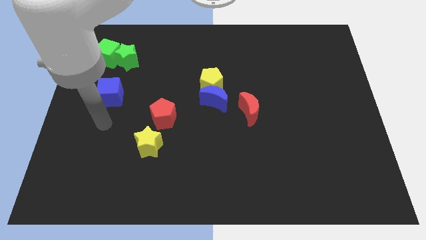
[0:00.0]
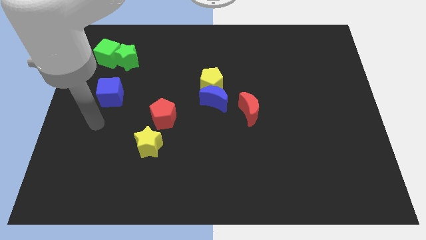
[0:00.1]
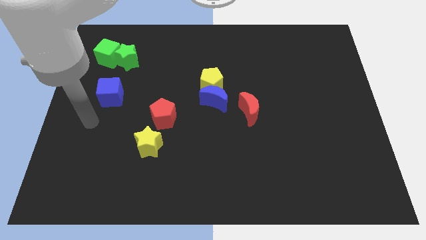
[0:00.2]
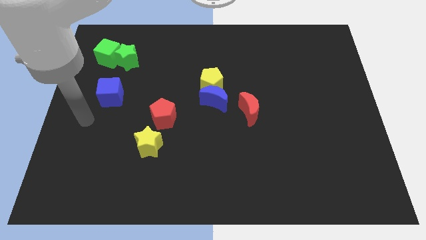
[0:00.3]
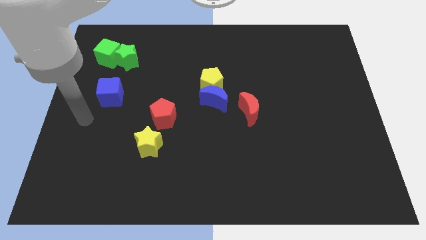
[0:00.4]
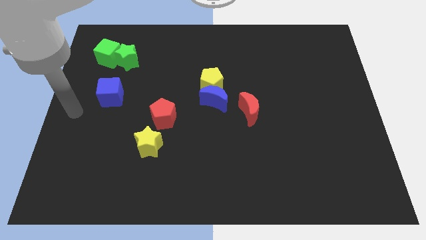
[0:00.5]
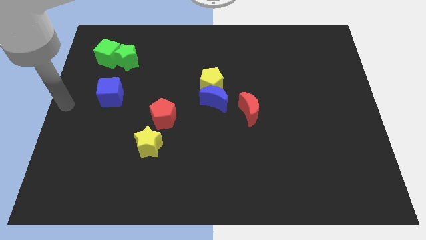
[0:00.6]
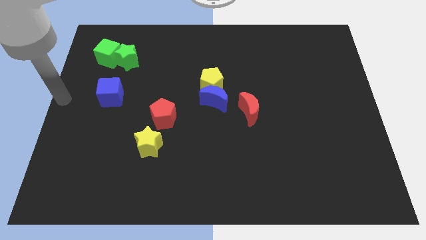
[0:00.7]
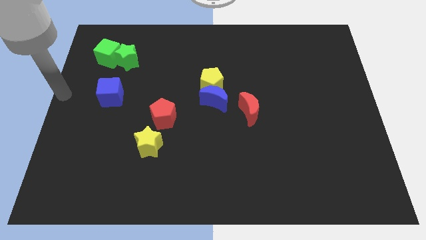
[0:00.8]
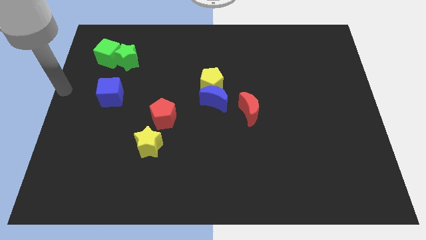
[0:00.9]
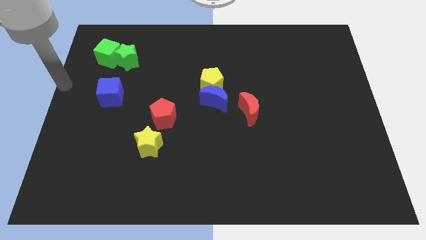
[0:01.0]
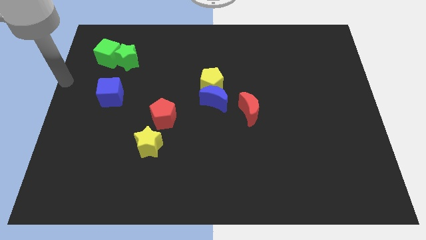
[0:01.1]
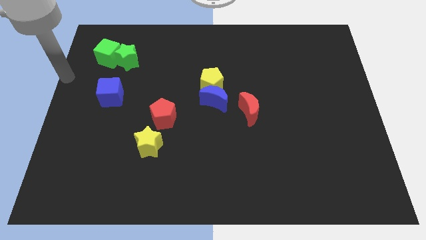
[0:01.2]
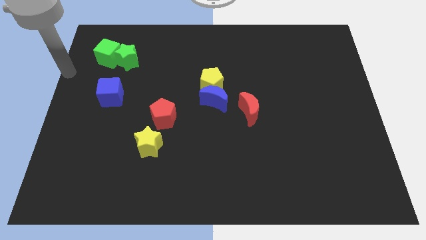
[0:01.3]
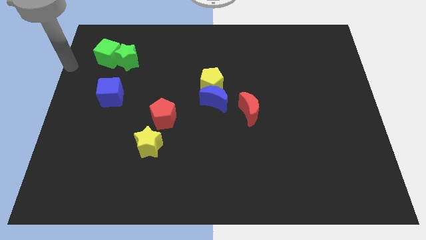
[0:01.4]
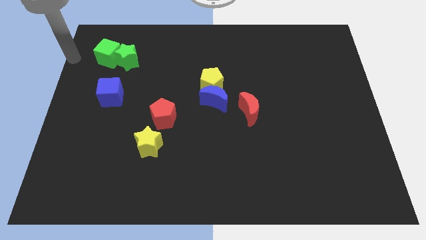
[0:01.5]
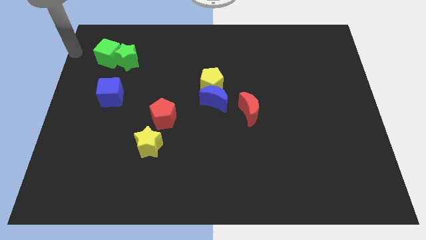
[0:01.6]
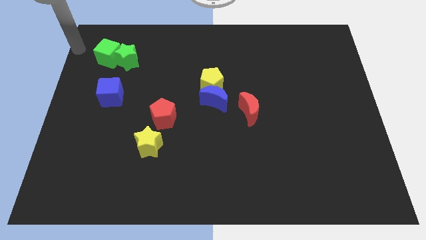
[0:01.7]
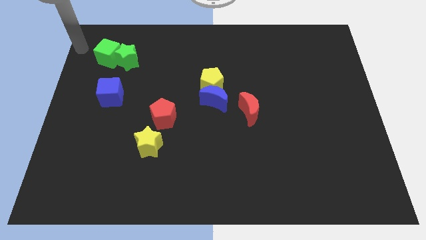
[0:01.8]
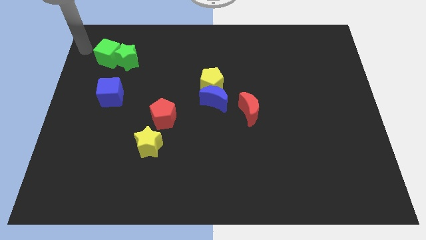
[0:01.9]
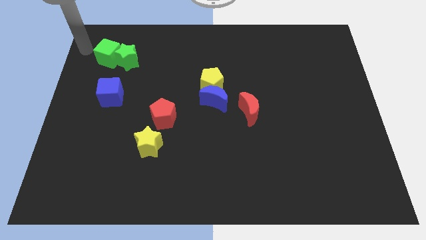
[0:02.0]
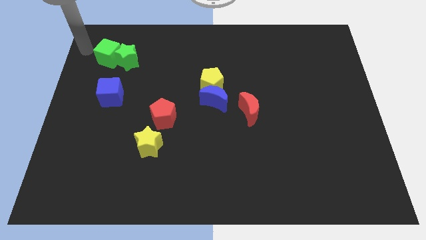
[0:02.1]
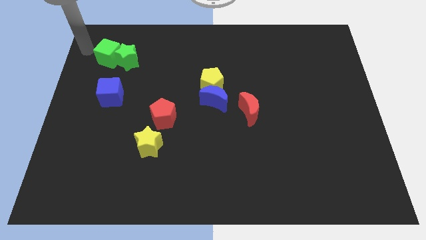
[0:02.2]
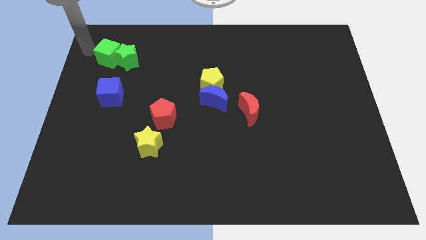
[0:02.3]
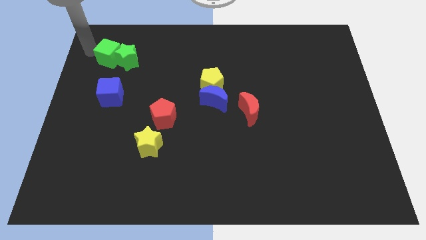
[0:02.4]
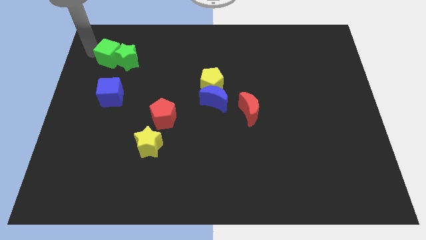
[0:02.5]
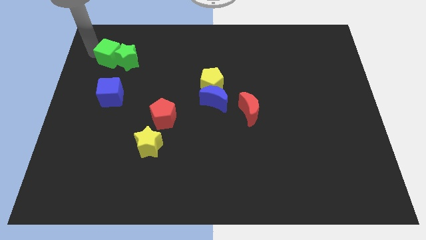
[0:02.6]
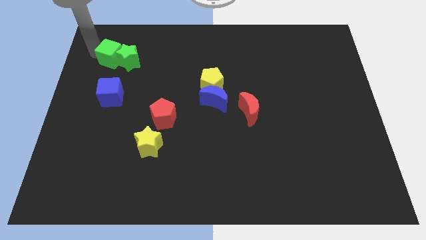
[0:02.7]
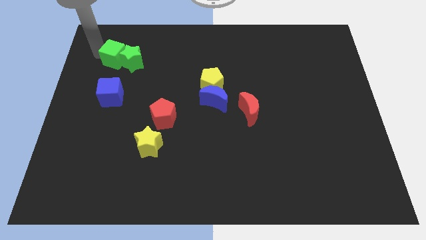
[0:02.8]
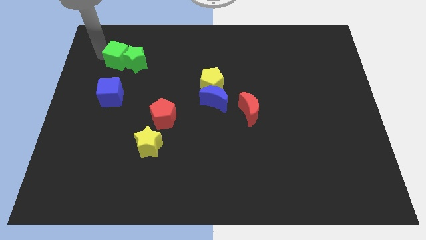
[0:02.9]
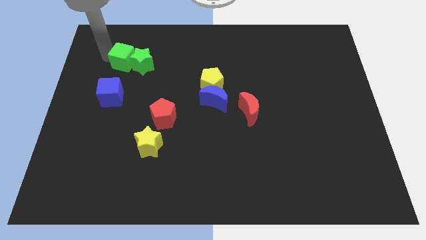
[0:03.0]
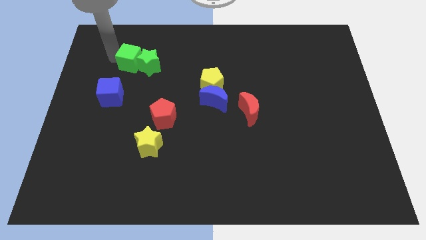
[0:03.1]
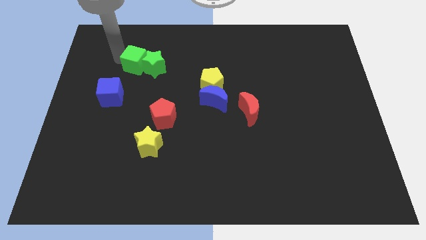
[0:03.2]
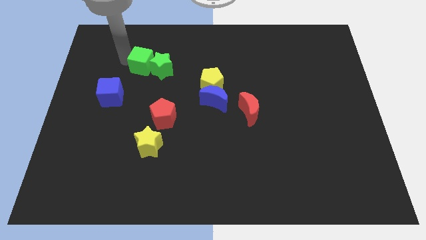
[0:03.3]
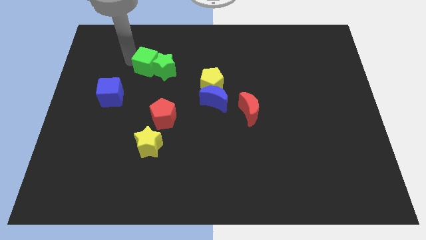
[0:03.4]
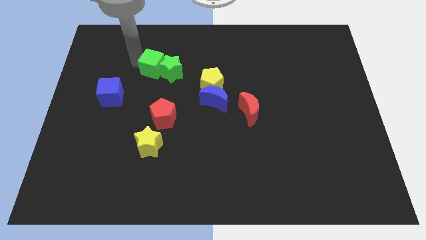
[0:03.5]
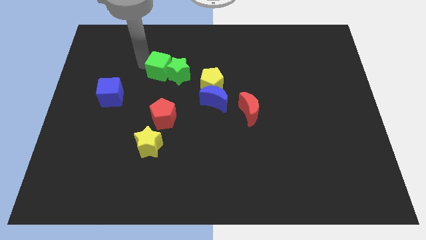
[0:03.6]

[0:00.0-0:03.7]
place the green cube and star above the red pentagon

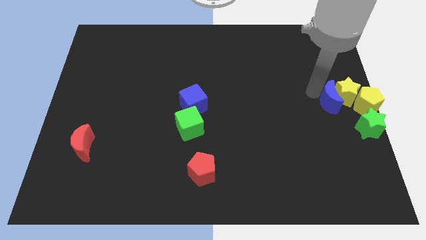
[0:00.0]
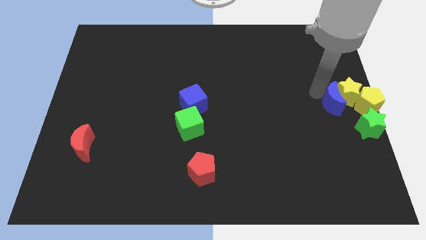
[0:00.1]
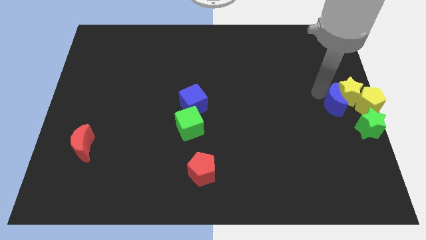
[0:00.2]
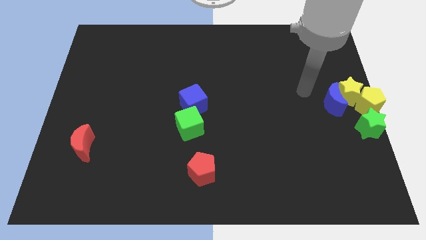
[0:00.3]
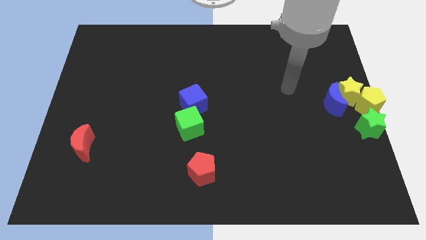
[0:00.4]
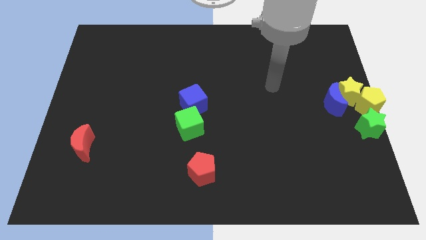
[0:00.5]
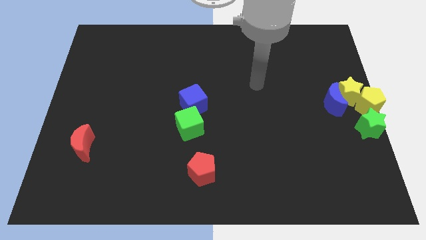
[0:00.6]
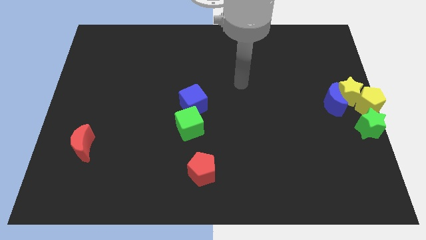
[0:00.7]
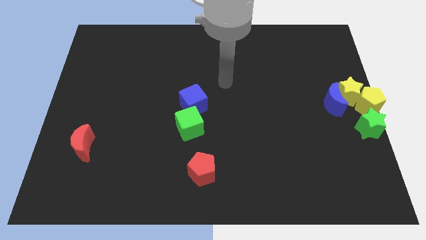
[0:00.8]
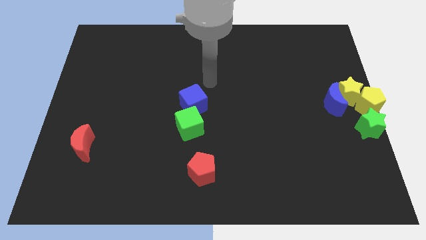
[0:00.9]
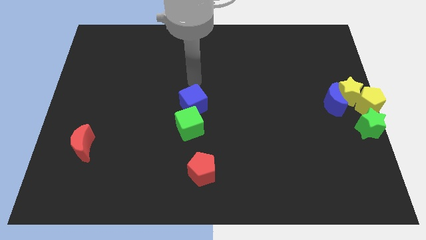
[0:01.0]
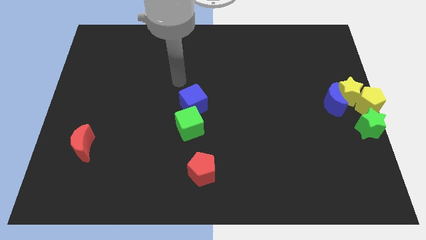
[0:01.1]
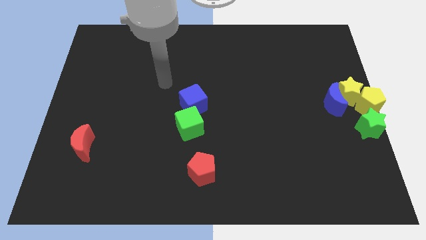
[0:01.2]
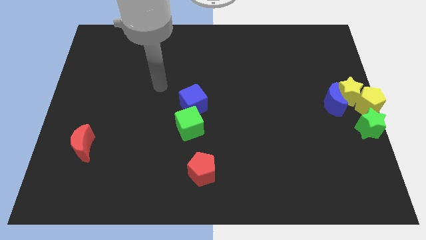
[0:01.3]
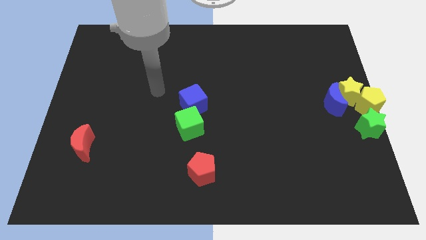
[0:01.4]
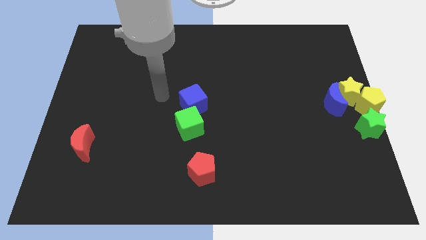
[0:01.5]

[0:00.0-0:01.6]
move your arm away from blue moon

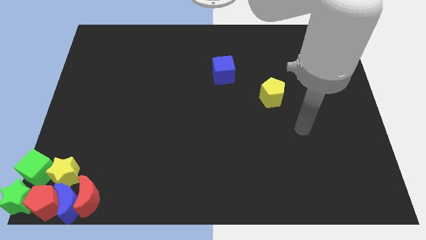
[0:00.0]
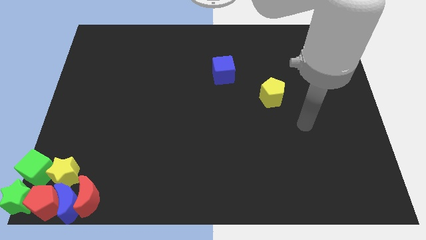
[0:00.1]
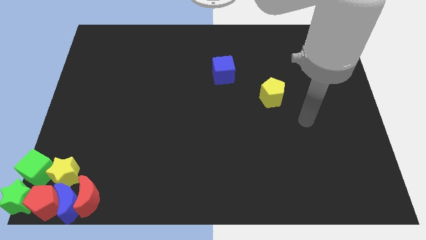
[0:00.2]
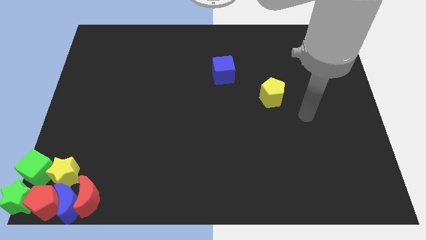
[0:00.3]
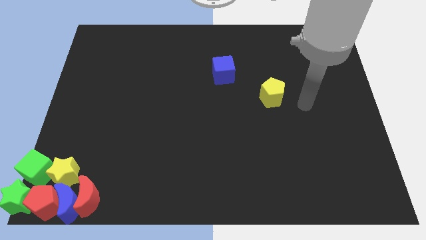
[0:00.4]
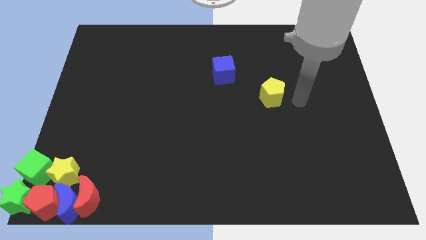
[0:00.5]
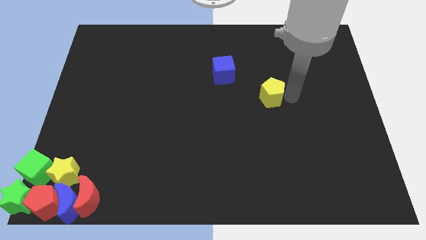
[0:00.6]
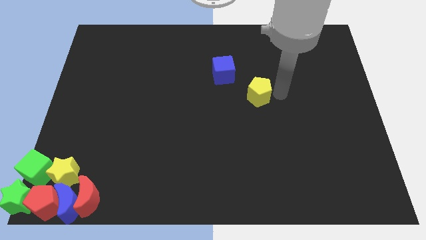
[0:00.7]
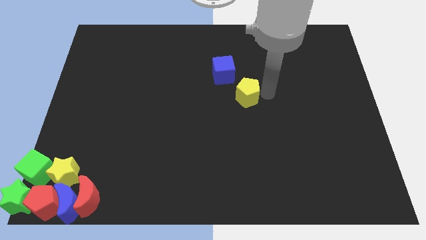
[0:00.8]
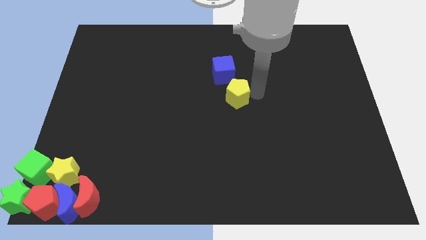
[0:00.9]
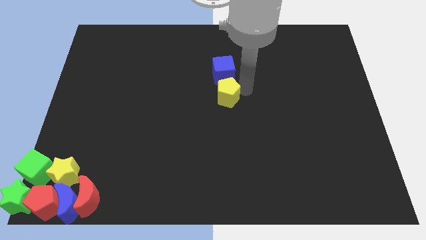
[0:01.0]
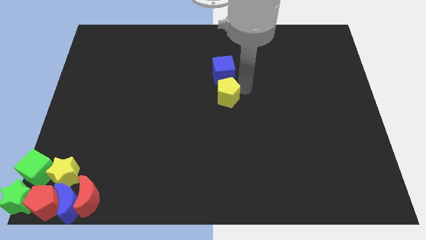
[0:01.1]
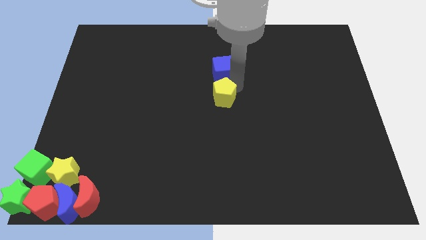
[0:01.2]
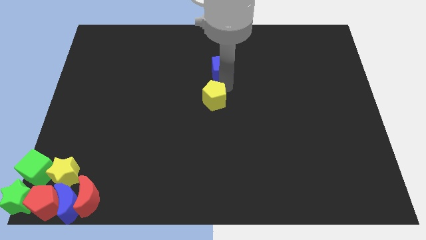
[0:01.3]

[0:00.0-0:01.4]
move the yellow pentagon to the bottom of the blue cube

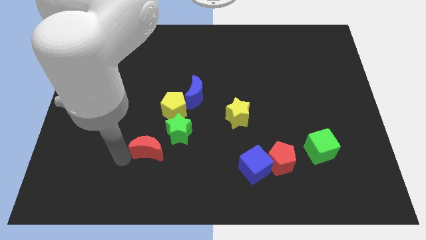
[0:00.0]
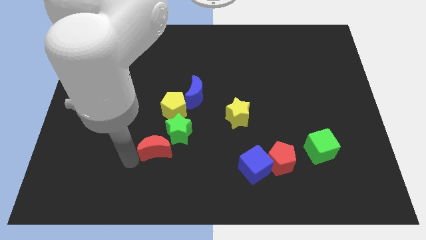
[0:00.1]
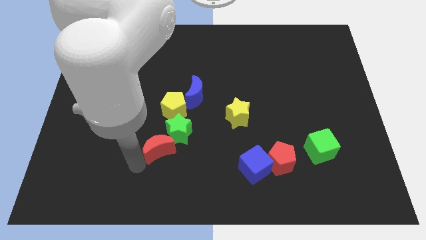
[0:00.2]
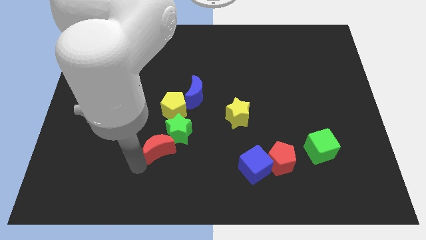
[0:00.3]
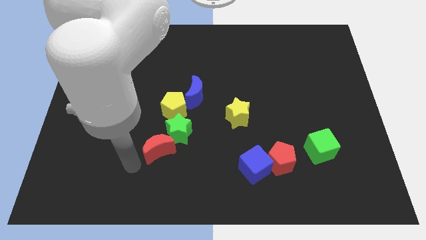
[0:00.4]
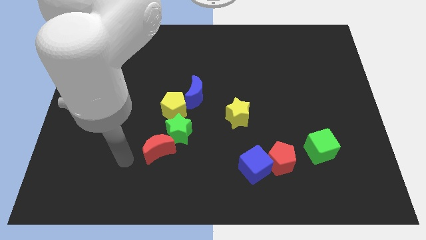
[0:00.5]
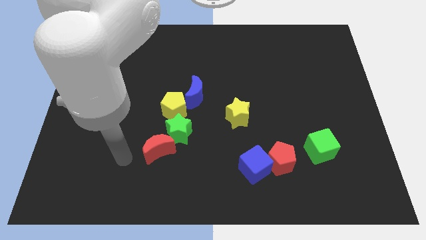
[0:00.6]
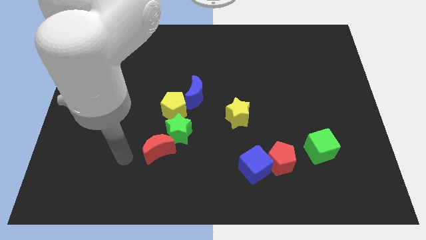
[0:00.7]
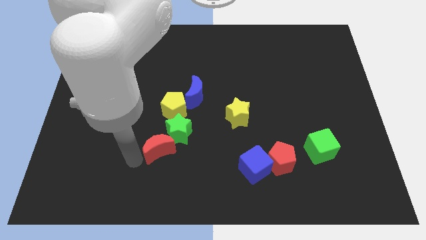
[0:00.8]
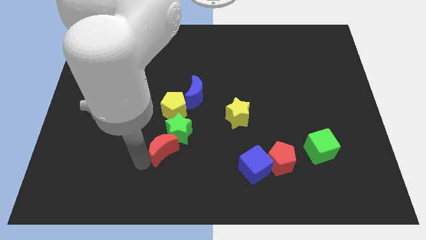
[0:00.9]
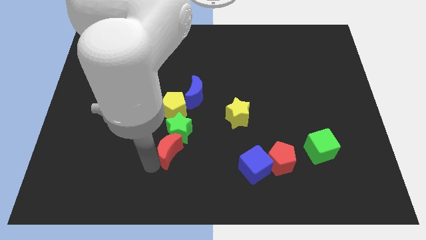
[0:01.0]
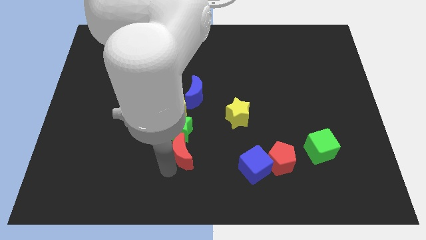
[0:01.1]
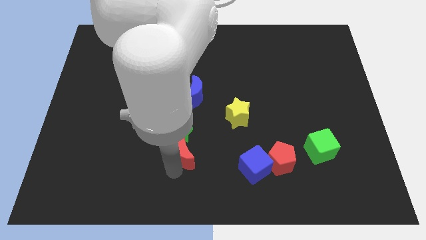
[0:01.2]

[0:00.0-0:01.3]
place red moon to the bottom of green star

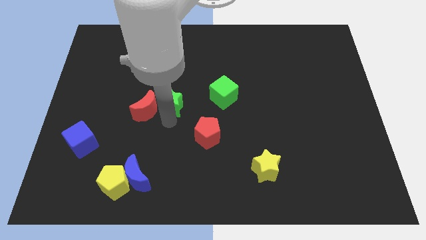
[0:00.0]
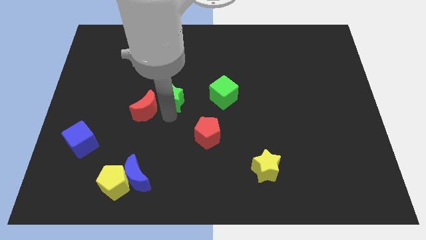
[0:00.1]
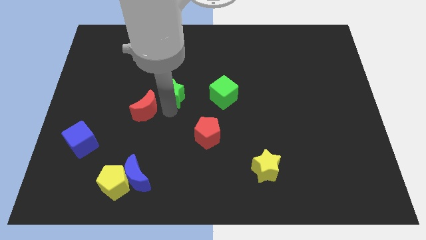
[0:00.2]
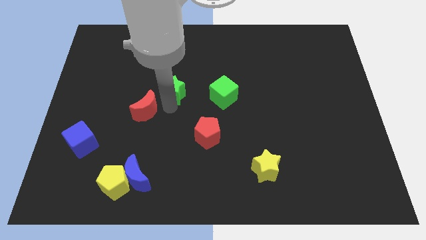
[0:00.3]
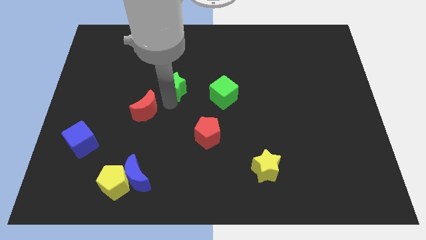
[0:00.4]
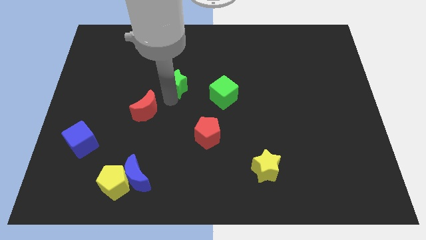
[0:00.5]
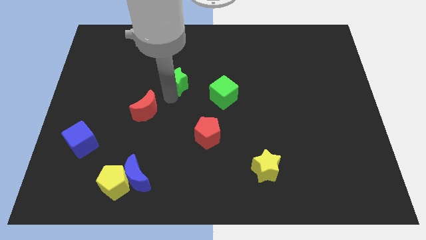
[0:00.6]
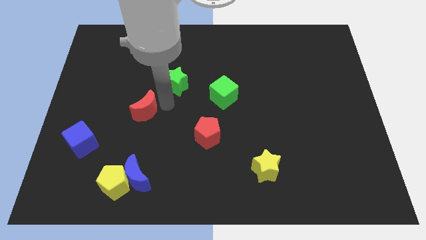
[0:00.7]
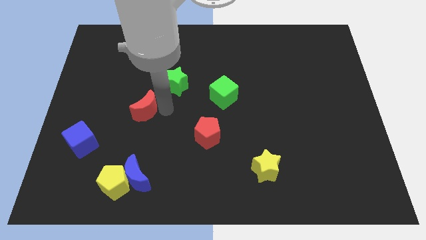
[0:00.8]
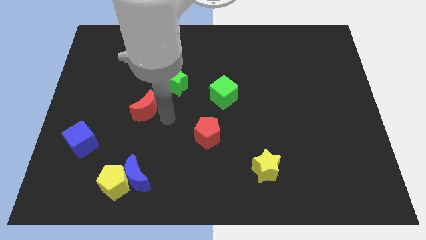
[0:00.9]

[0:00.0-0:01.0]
place green star slightly upwards
